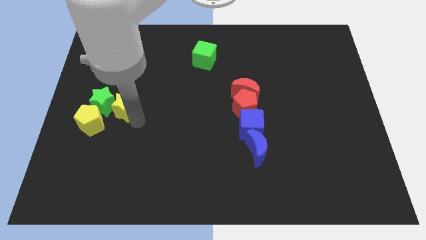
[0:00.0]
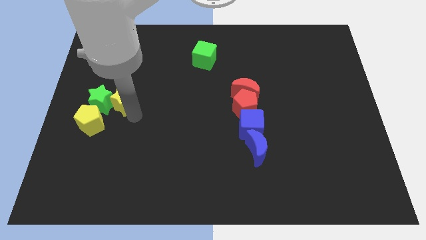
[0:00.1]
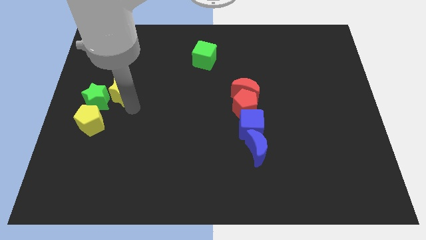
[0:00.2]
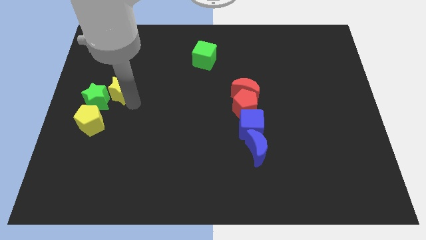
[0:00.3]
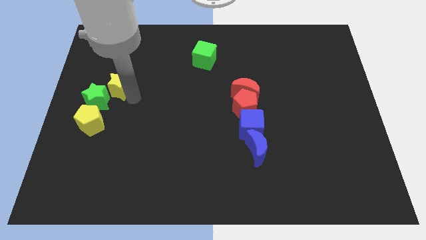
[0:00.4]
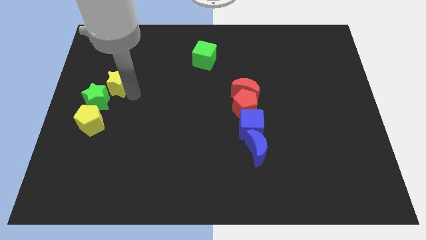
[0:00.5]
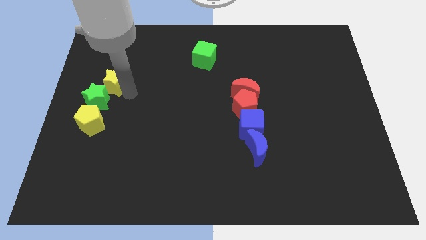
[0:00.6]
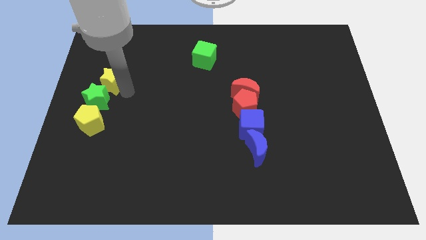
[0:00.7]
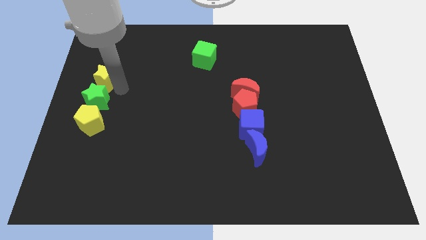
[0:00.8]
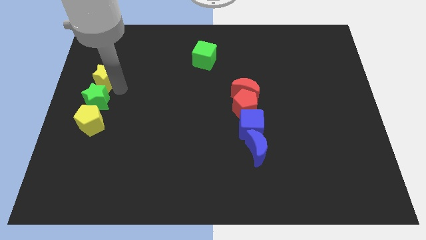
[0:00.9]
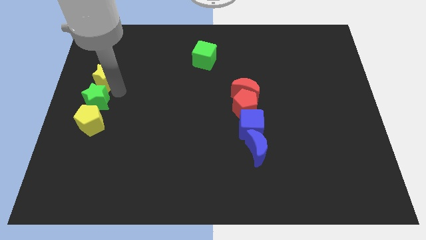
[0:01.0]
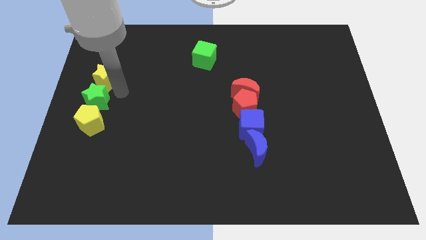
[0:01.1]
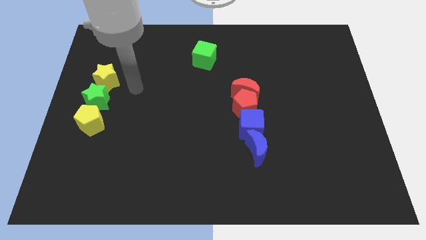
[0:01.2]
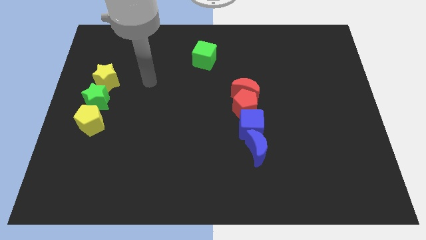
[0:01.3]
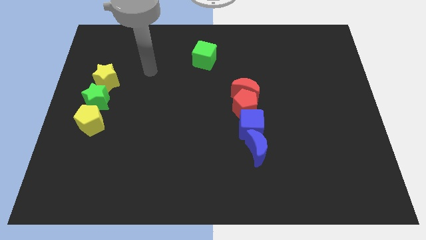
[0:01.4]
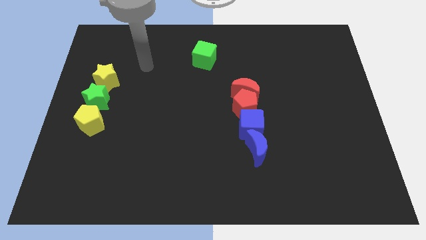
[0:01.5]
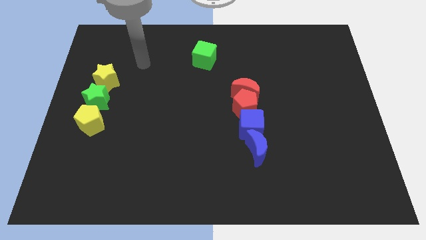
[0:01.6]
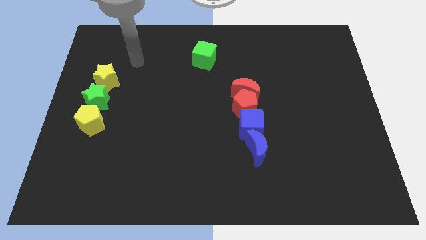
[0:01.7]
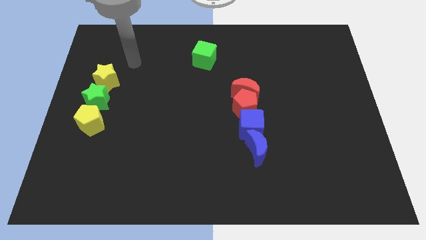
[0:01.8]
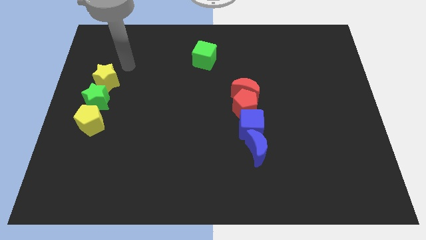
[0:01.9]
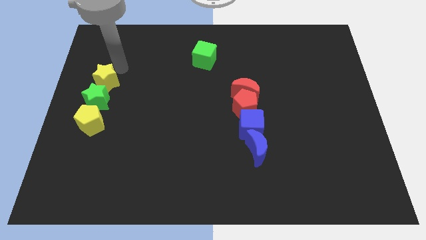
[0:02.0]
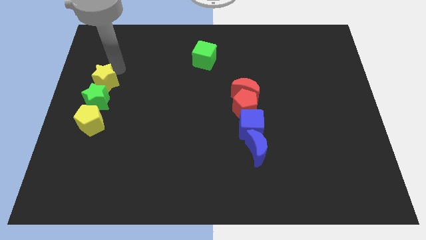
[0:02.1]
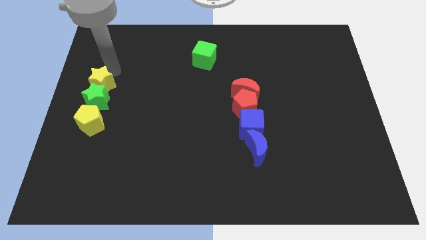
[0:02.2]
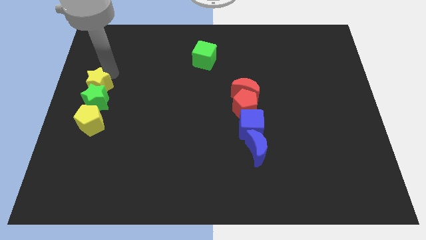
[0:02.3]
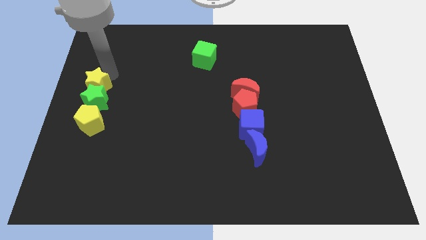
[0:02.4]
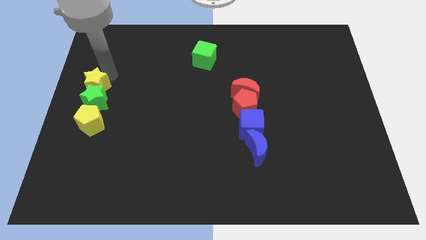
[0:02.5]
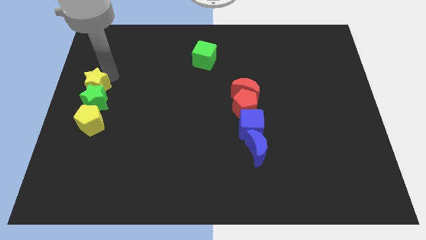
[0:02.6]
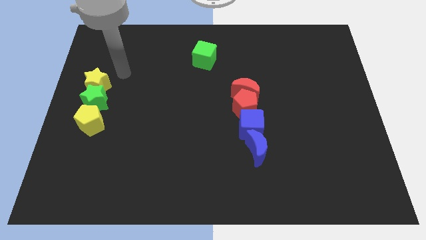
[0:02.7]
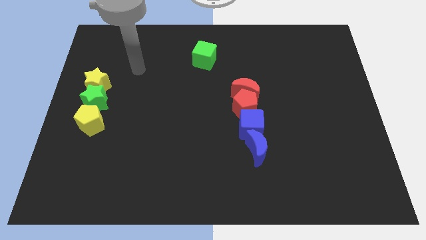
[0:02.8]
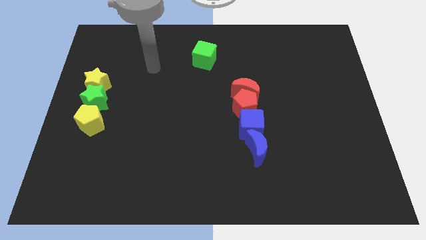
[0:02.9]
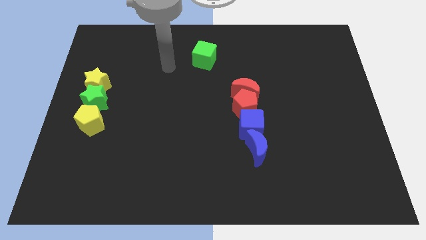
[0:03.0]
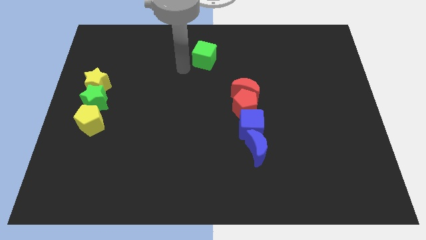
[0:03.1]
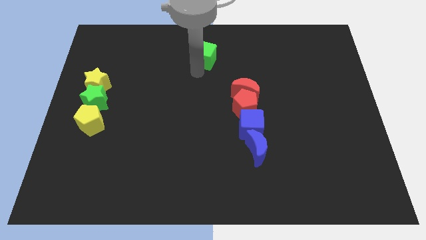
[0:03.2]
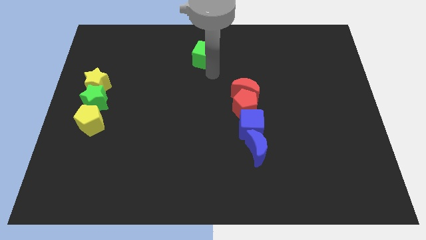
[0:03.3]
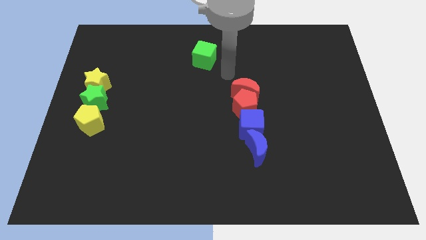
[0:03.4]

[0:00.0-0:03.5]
move the yellow star above the green star

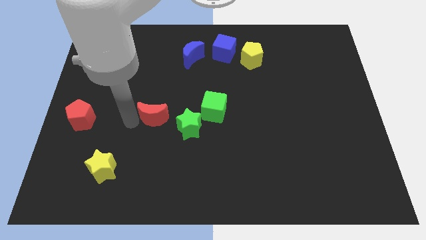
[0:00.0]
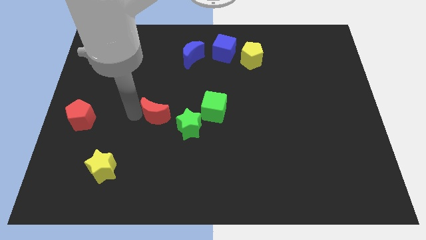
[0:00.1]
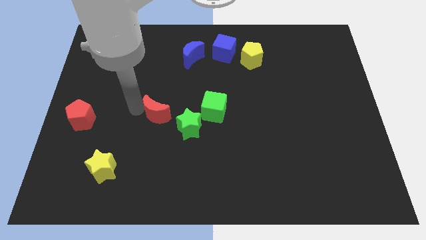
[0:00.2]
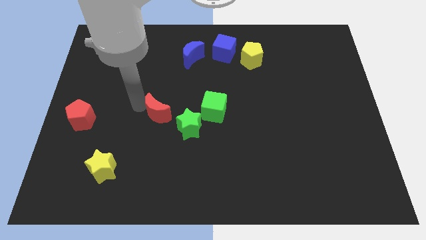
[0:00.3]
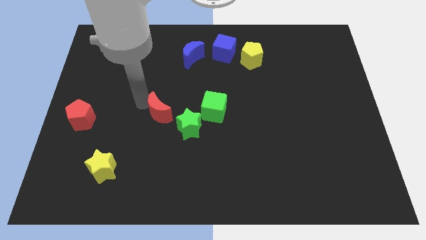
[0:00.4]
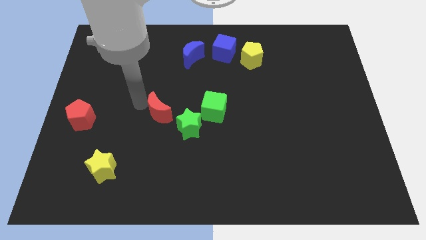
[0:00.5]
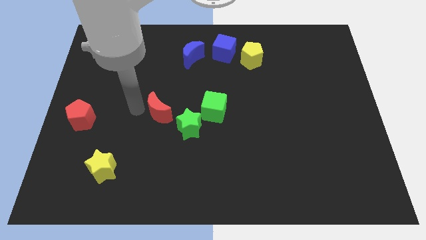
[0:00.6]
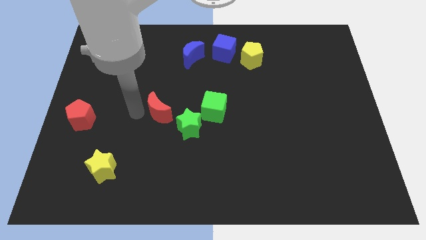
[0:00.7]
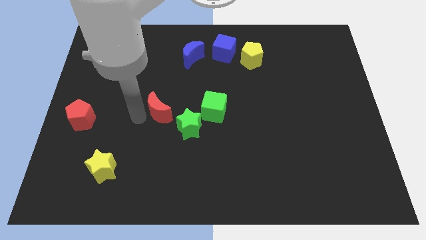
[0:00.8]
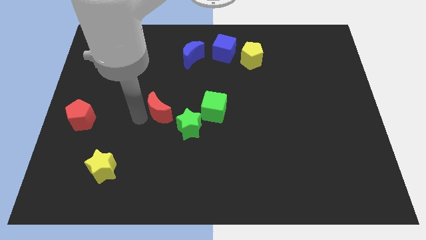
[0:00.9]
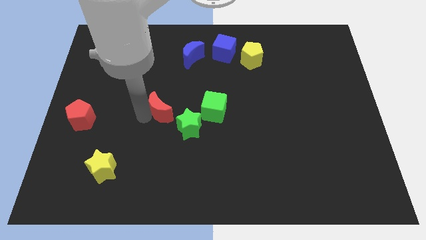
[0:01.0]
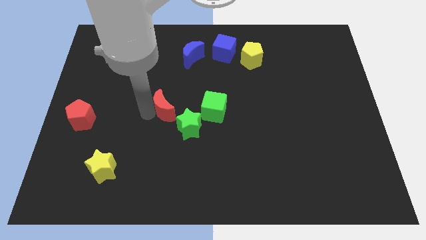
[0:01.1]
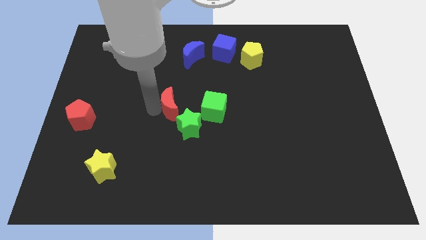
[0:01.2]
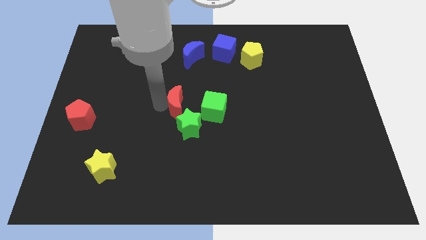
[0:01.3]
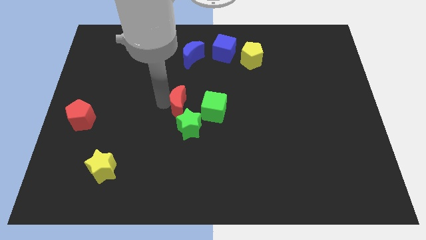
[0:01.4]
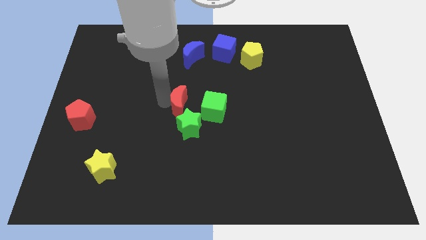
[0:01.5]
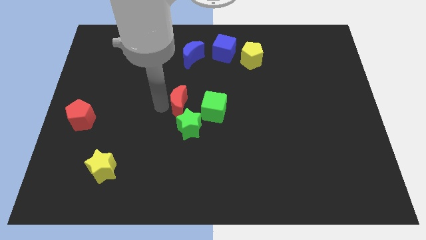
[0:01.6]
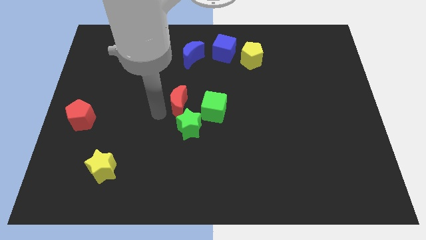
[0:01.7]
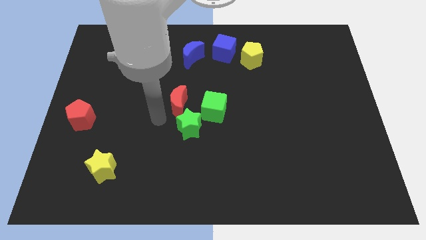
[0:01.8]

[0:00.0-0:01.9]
place red crescent above green star

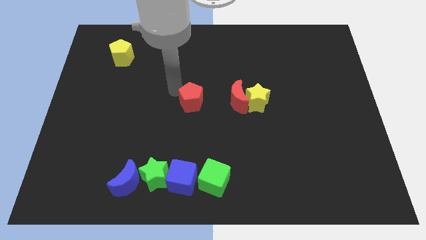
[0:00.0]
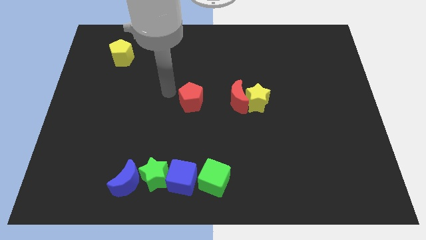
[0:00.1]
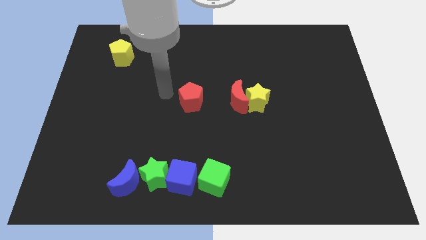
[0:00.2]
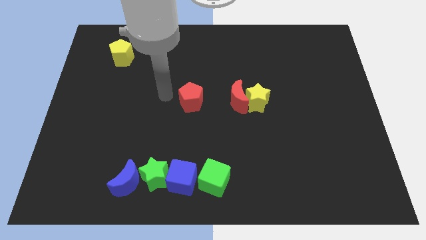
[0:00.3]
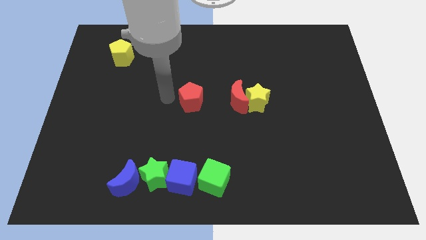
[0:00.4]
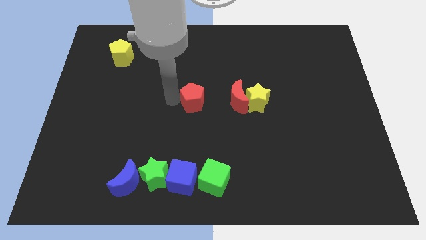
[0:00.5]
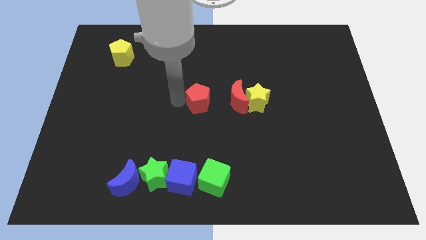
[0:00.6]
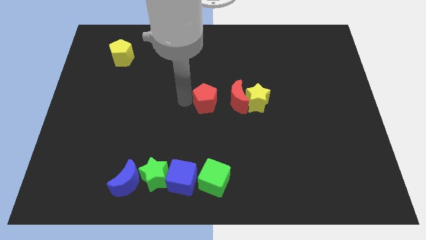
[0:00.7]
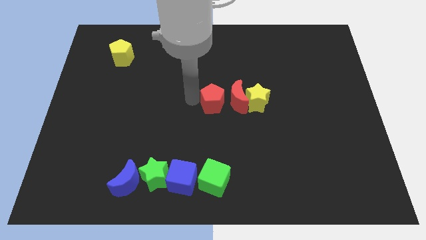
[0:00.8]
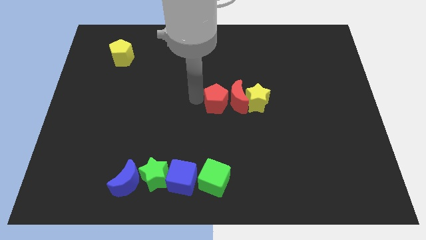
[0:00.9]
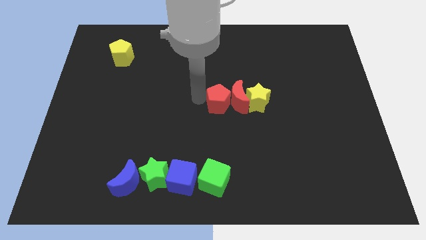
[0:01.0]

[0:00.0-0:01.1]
take the red pentagon into the left side of the red moon

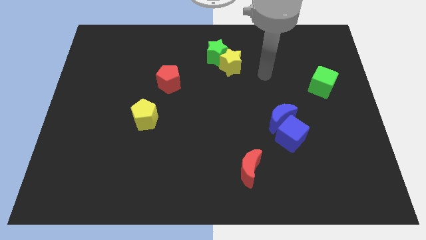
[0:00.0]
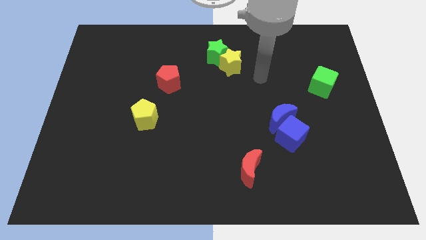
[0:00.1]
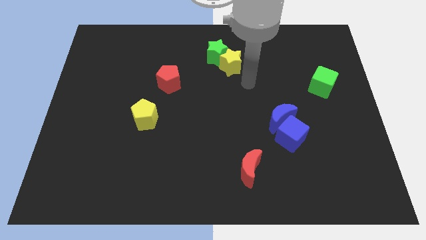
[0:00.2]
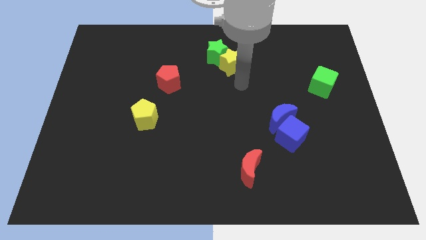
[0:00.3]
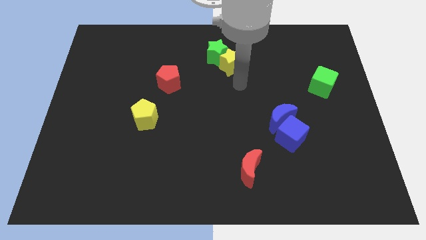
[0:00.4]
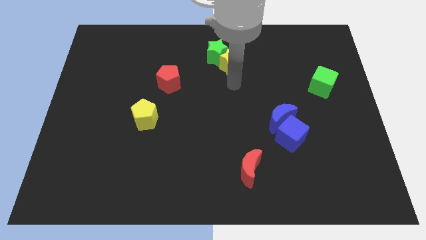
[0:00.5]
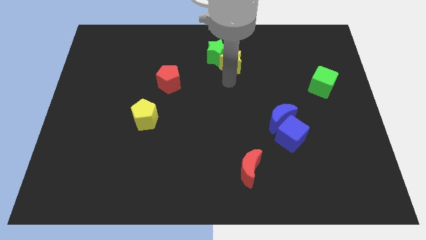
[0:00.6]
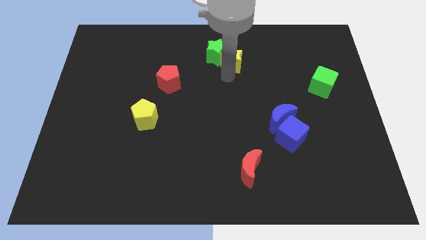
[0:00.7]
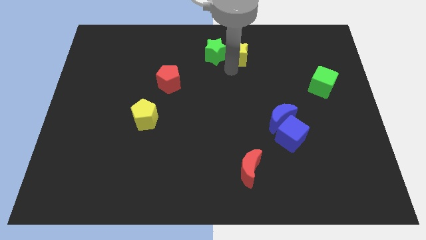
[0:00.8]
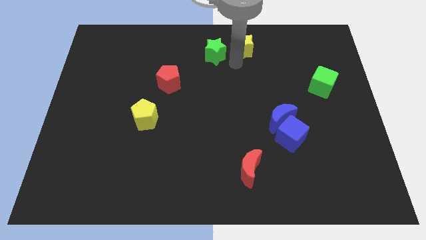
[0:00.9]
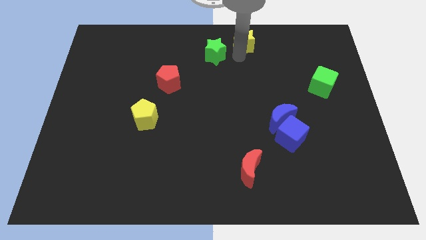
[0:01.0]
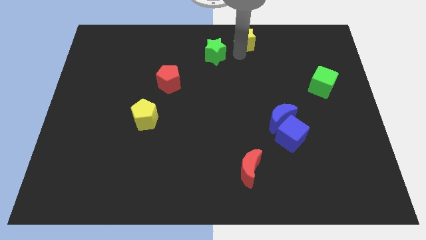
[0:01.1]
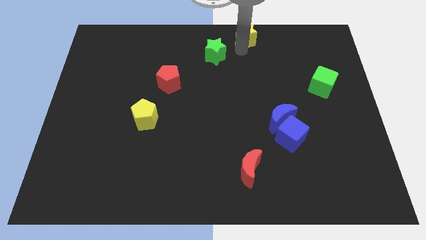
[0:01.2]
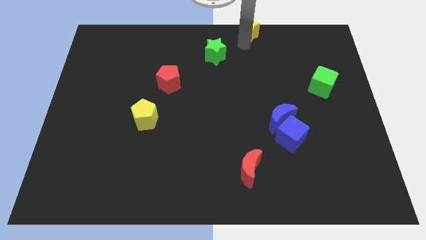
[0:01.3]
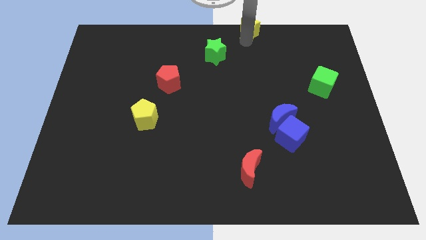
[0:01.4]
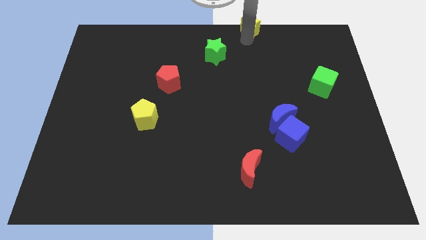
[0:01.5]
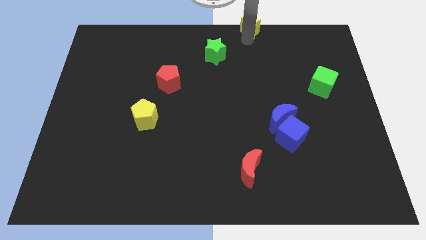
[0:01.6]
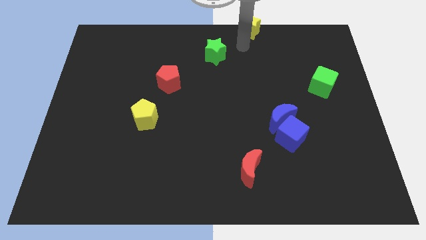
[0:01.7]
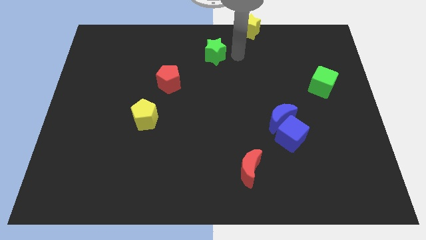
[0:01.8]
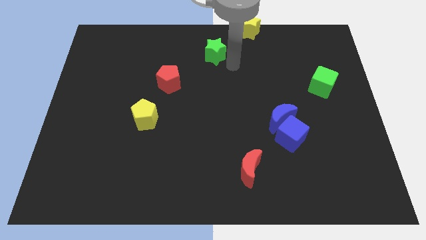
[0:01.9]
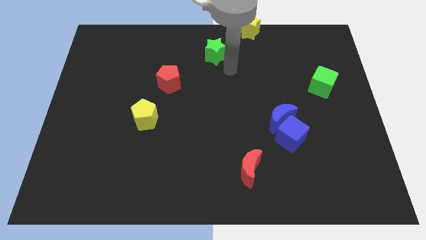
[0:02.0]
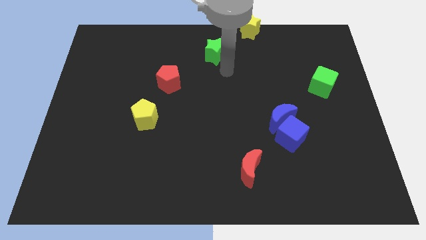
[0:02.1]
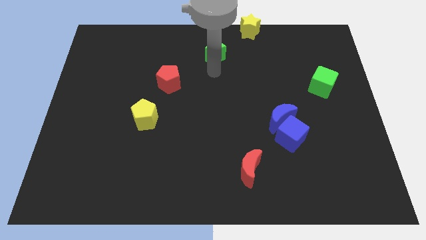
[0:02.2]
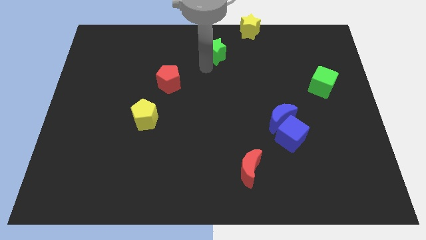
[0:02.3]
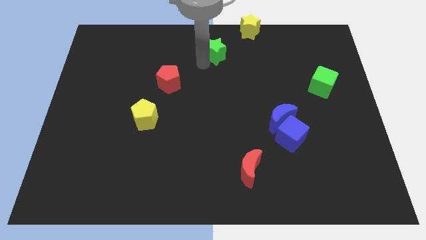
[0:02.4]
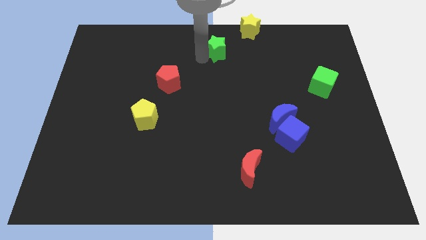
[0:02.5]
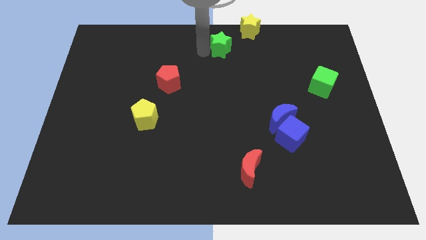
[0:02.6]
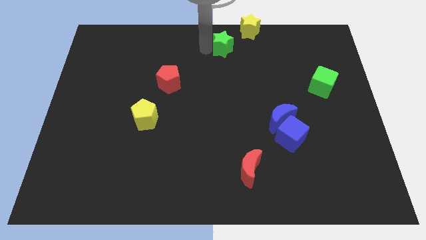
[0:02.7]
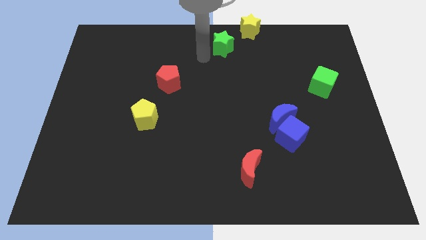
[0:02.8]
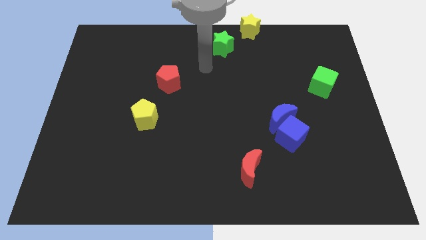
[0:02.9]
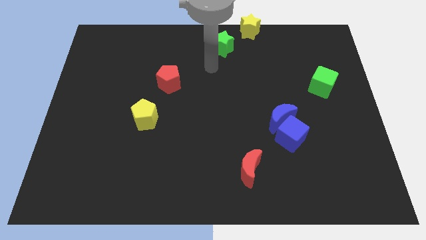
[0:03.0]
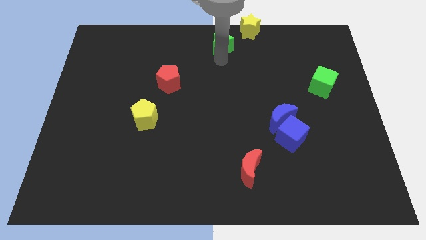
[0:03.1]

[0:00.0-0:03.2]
push yellow star towards top of the board
